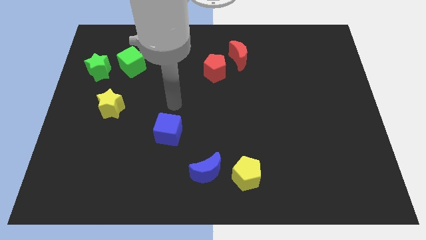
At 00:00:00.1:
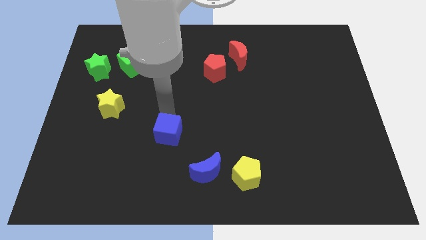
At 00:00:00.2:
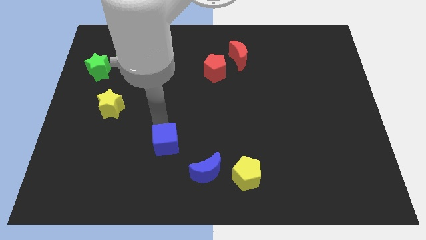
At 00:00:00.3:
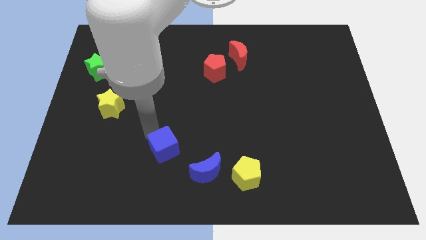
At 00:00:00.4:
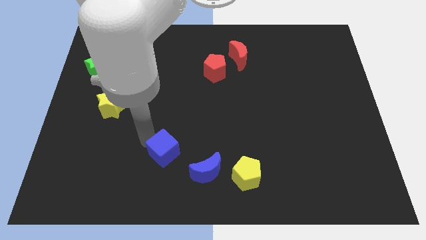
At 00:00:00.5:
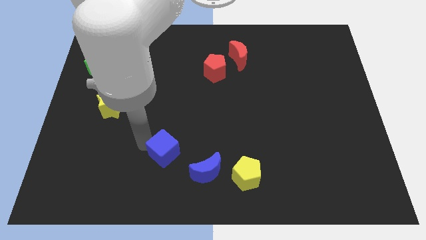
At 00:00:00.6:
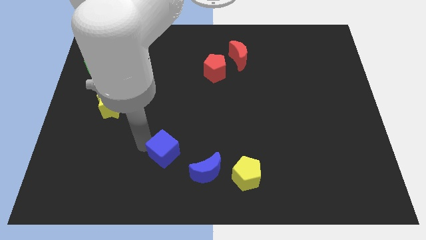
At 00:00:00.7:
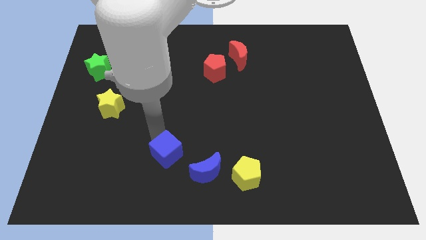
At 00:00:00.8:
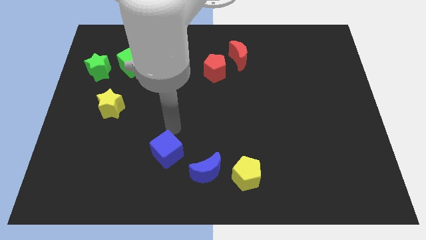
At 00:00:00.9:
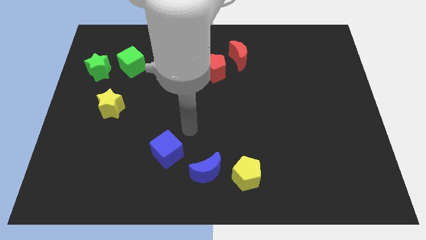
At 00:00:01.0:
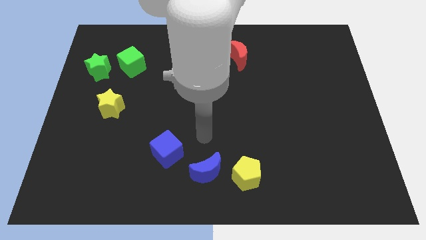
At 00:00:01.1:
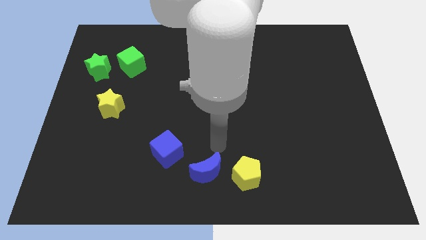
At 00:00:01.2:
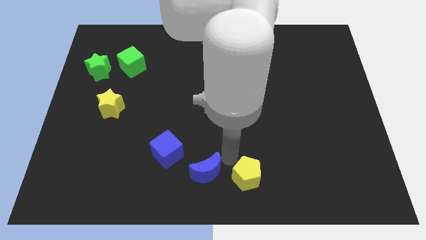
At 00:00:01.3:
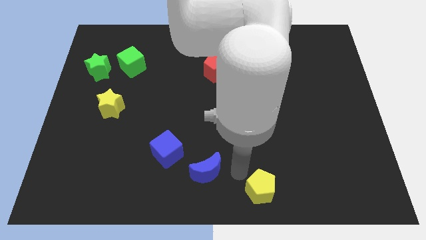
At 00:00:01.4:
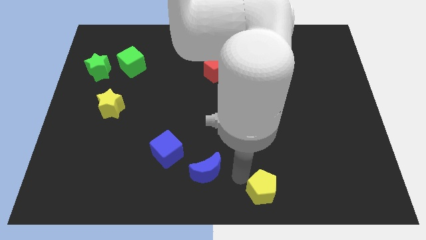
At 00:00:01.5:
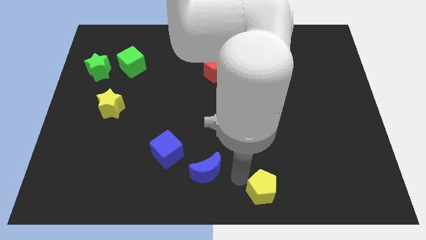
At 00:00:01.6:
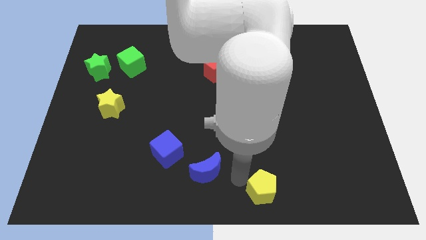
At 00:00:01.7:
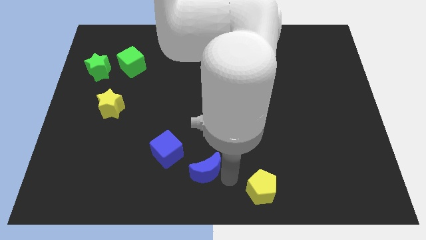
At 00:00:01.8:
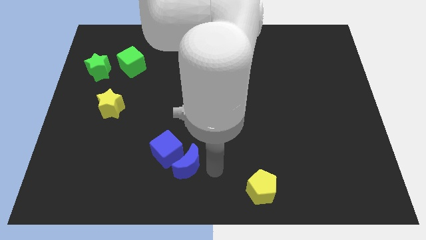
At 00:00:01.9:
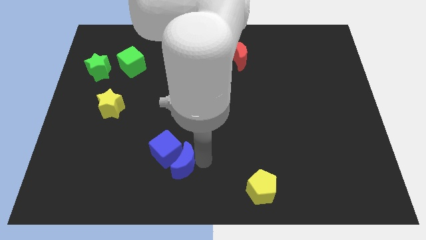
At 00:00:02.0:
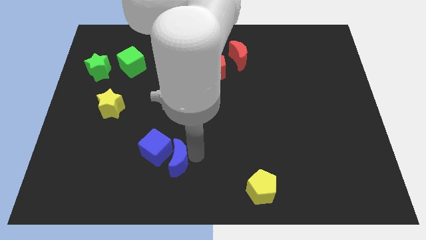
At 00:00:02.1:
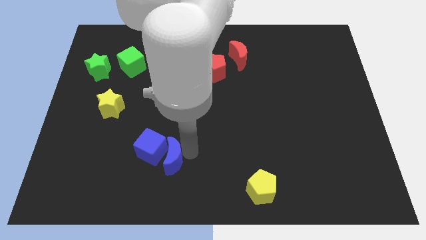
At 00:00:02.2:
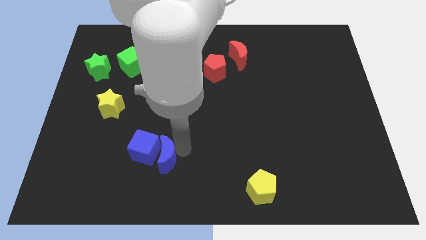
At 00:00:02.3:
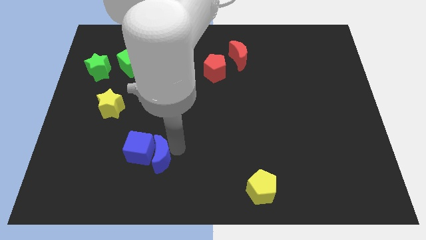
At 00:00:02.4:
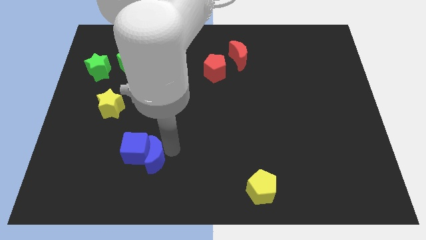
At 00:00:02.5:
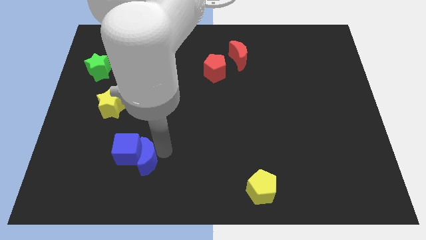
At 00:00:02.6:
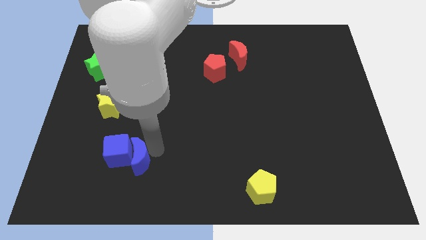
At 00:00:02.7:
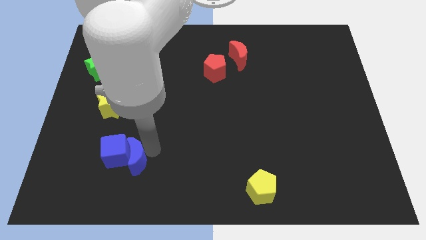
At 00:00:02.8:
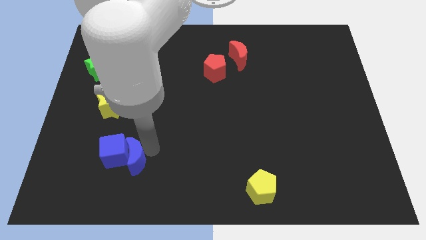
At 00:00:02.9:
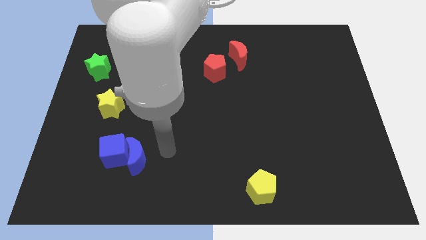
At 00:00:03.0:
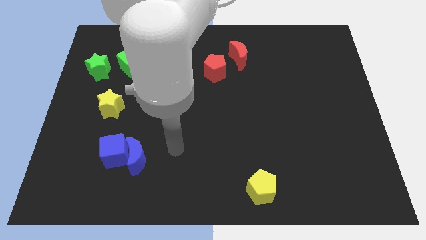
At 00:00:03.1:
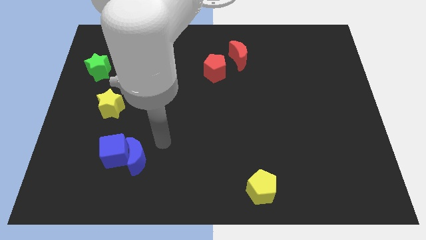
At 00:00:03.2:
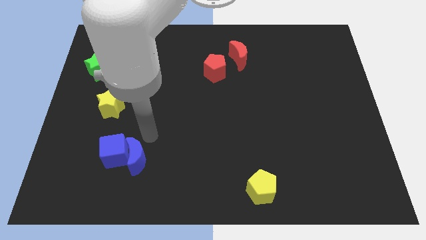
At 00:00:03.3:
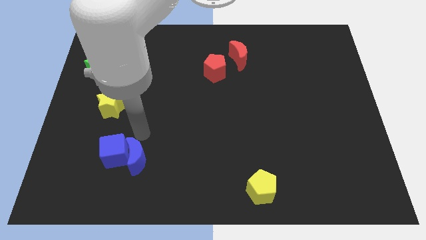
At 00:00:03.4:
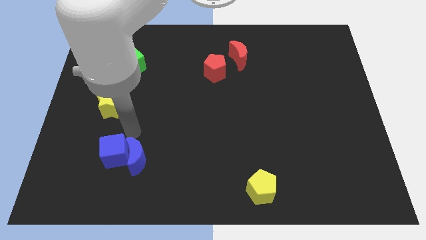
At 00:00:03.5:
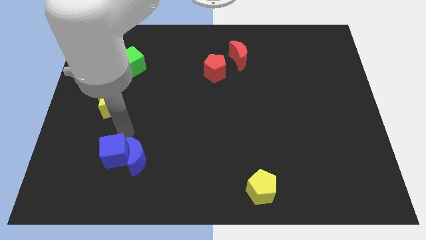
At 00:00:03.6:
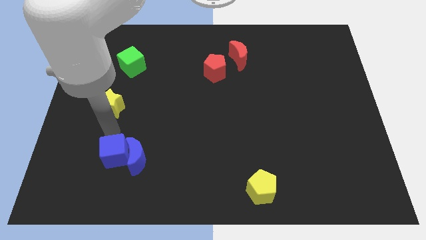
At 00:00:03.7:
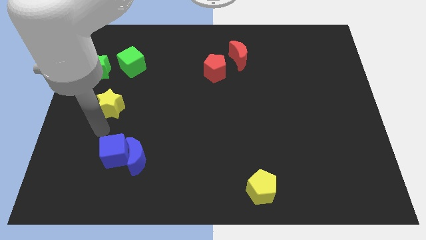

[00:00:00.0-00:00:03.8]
slightly drag blue crescent and blue cube towards left side

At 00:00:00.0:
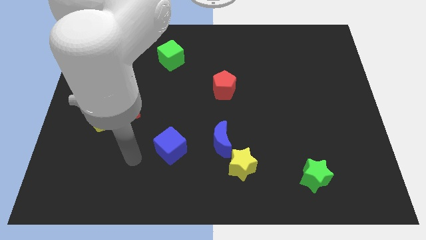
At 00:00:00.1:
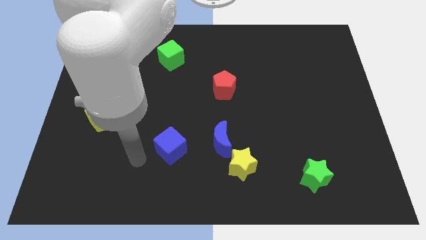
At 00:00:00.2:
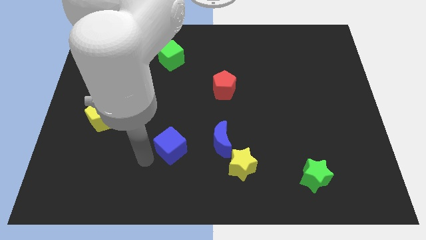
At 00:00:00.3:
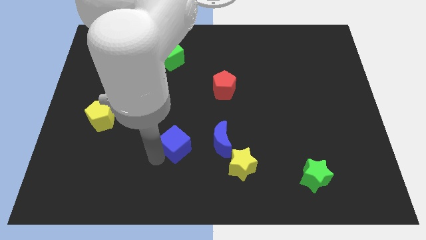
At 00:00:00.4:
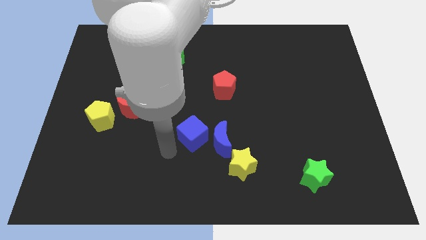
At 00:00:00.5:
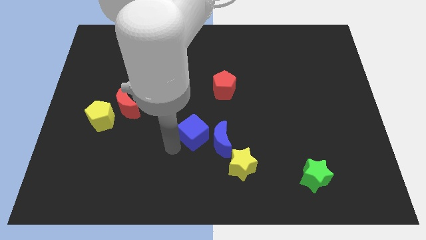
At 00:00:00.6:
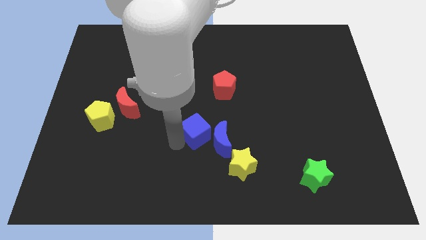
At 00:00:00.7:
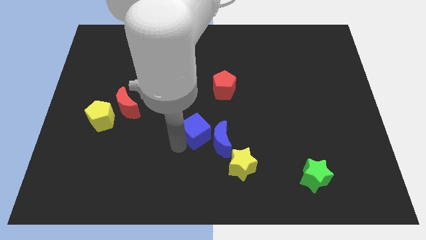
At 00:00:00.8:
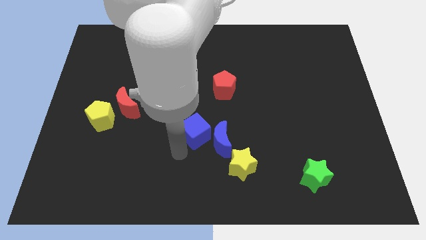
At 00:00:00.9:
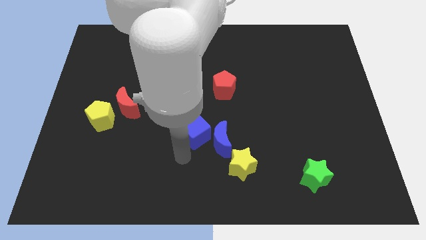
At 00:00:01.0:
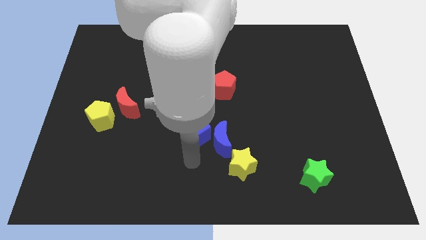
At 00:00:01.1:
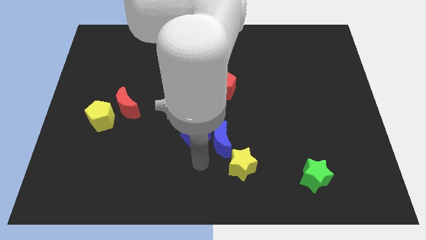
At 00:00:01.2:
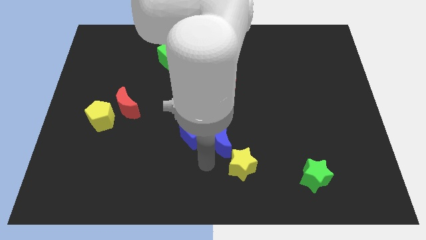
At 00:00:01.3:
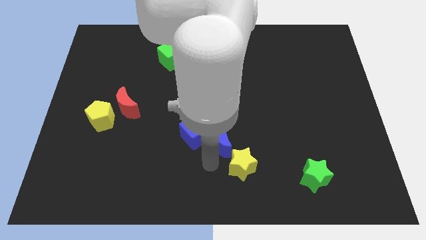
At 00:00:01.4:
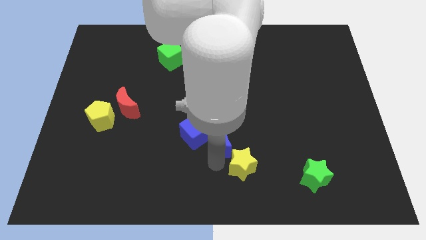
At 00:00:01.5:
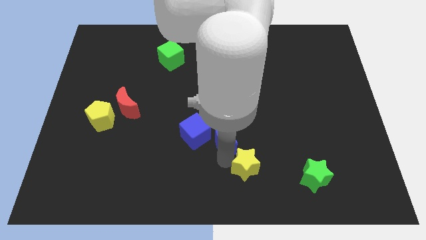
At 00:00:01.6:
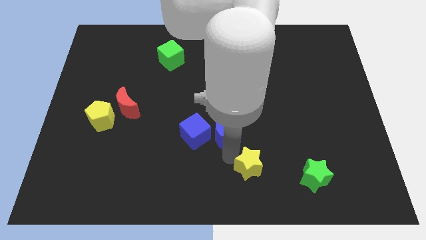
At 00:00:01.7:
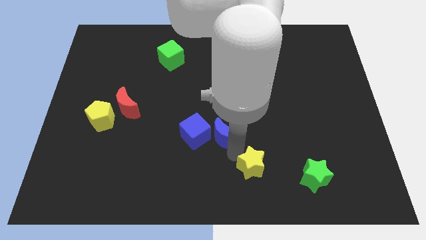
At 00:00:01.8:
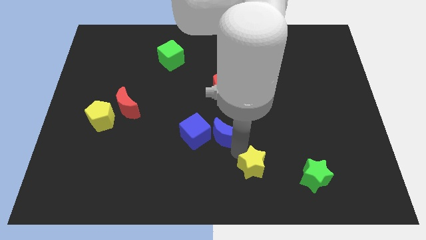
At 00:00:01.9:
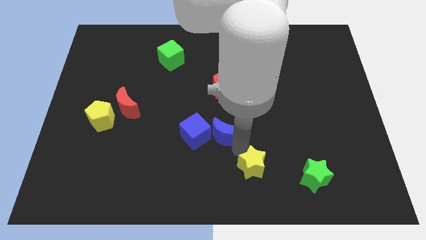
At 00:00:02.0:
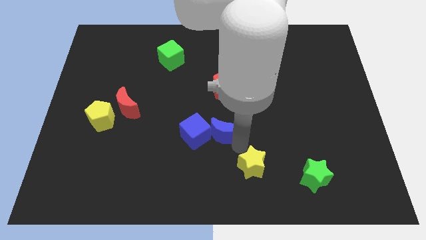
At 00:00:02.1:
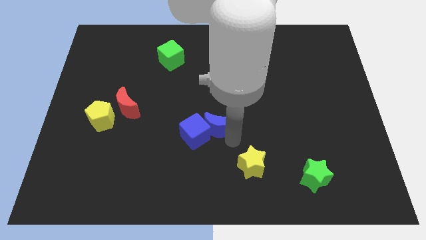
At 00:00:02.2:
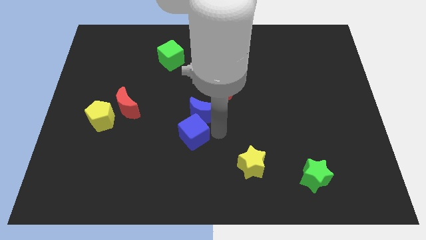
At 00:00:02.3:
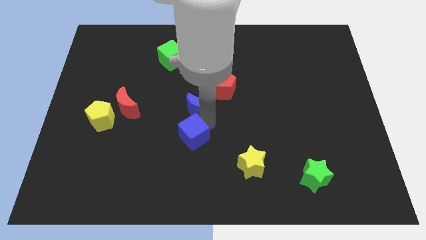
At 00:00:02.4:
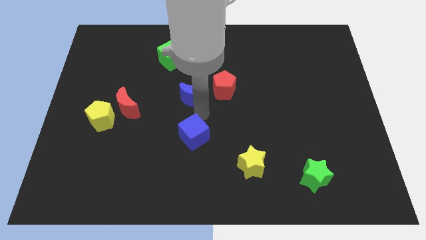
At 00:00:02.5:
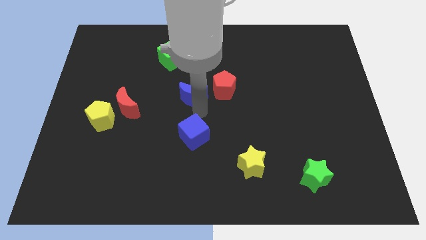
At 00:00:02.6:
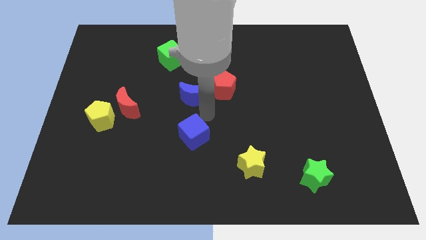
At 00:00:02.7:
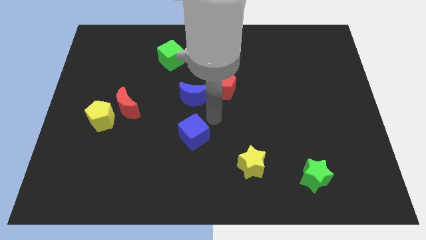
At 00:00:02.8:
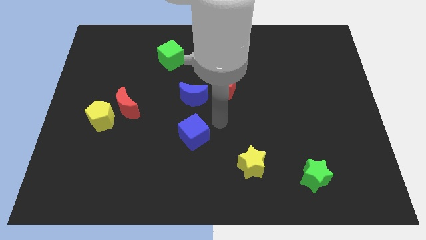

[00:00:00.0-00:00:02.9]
place the blue crescent at left side of the red pentagon

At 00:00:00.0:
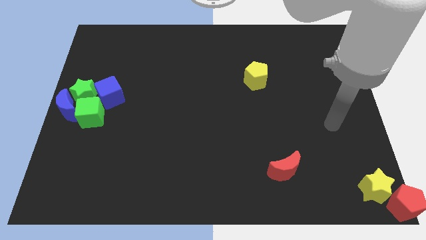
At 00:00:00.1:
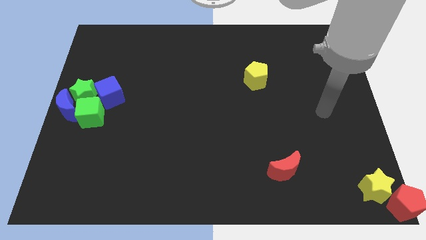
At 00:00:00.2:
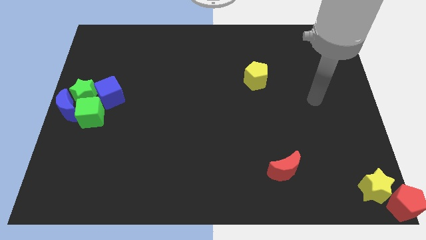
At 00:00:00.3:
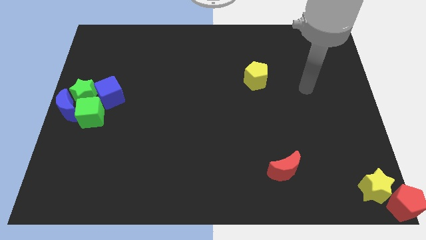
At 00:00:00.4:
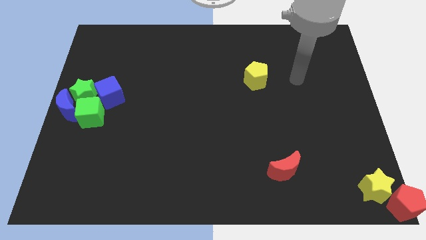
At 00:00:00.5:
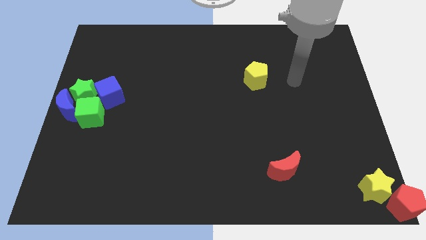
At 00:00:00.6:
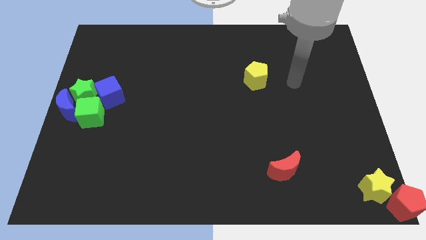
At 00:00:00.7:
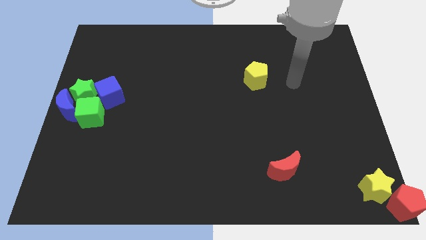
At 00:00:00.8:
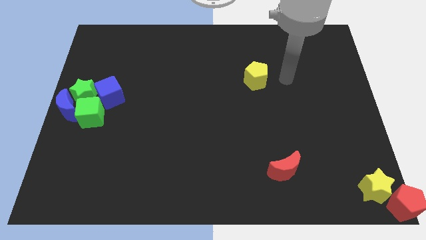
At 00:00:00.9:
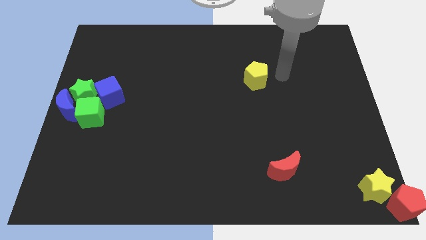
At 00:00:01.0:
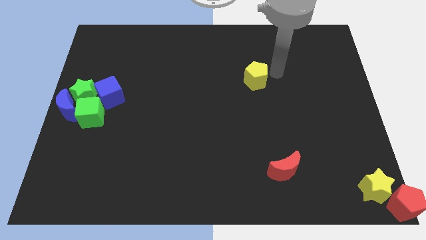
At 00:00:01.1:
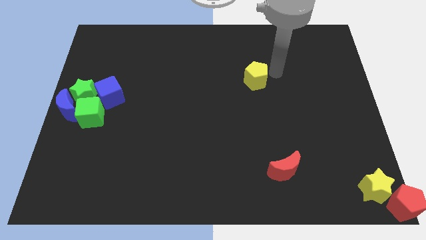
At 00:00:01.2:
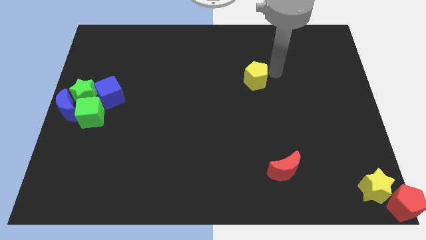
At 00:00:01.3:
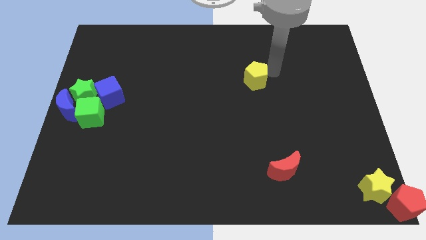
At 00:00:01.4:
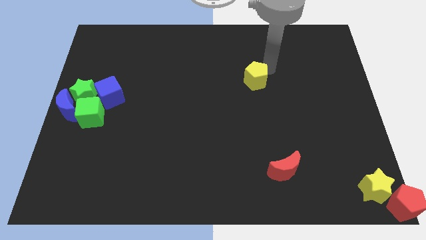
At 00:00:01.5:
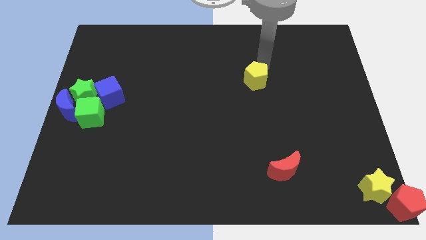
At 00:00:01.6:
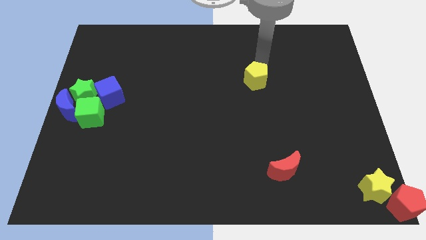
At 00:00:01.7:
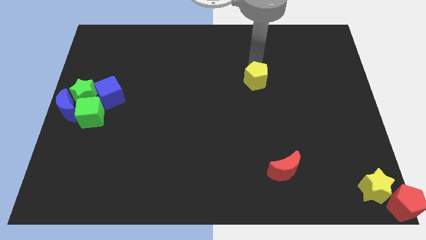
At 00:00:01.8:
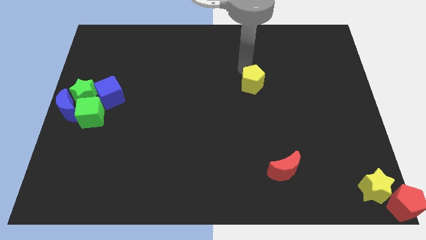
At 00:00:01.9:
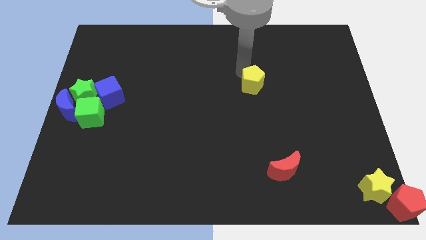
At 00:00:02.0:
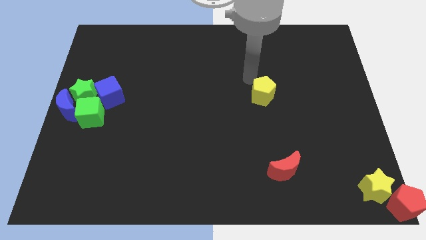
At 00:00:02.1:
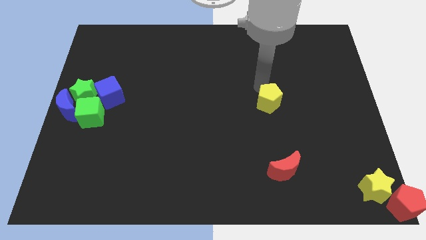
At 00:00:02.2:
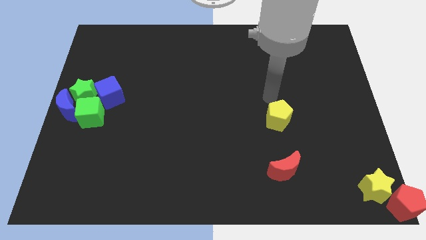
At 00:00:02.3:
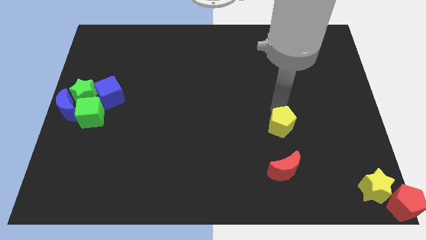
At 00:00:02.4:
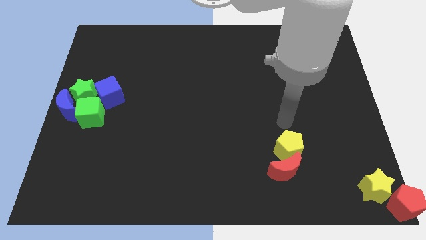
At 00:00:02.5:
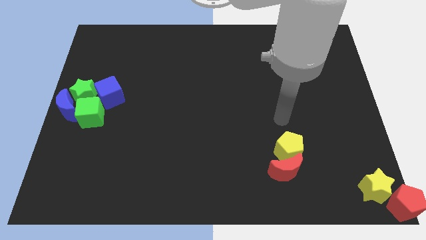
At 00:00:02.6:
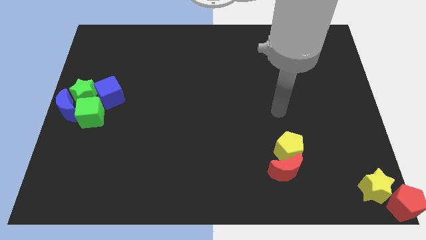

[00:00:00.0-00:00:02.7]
push the yellow pentagon into the top of the red crescent
